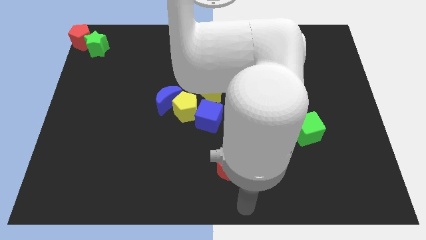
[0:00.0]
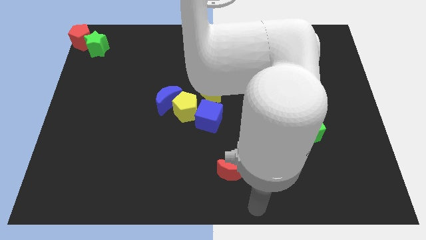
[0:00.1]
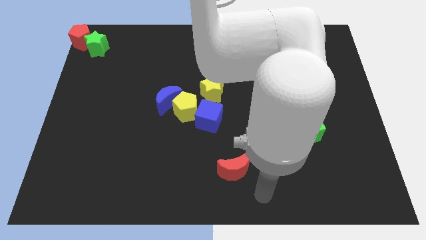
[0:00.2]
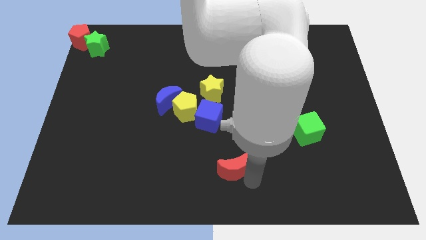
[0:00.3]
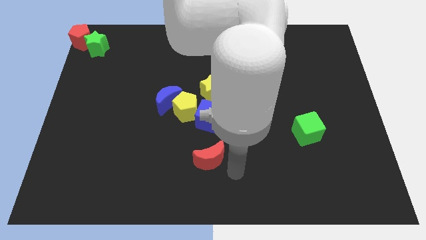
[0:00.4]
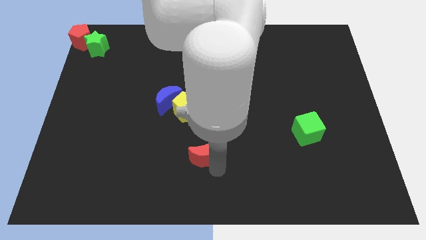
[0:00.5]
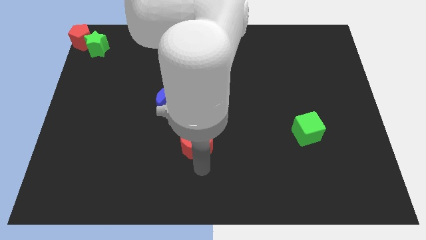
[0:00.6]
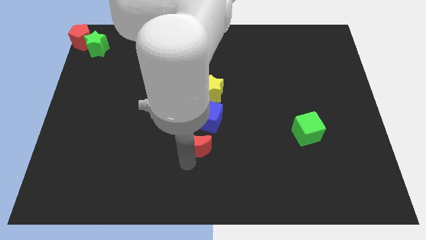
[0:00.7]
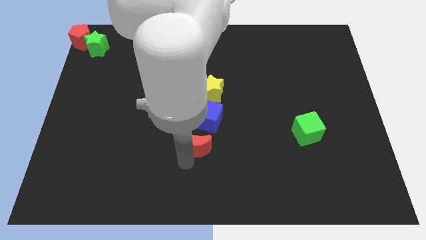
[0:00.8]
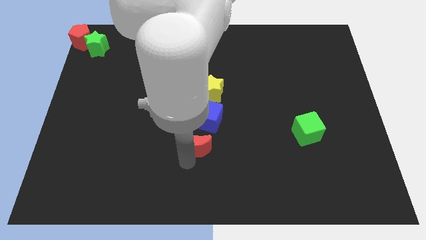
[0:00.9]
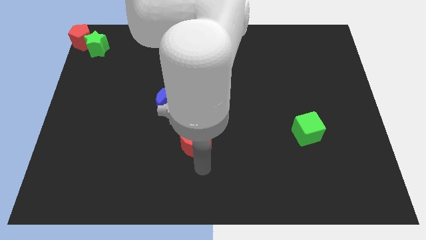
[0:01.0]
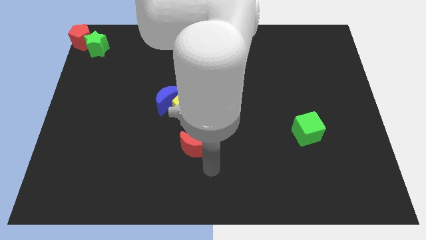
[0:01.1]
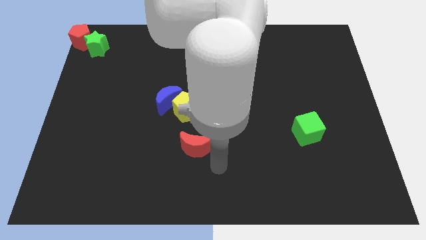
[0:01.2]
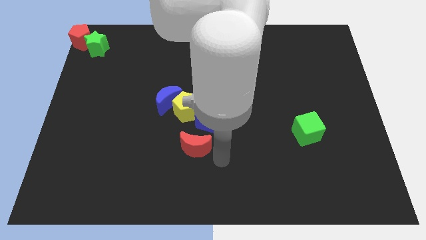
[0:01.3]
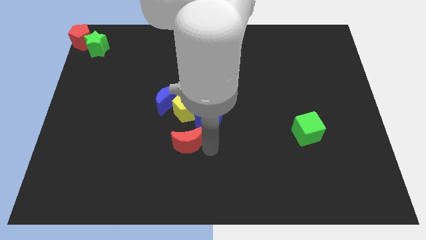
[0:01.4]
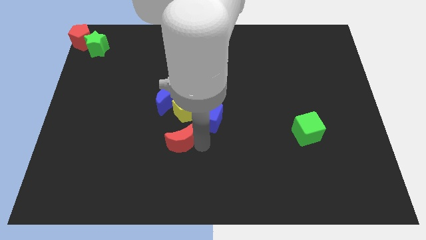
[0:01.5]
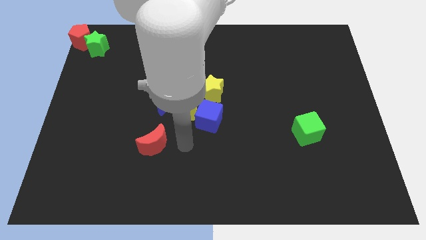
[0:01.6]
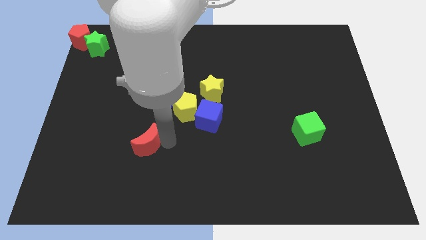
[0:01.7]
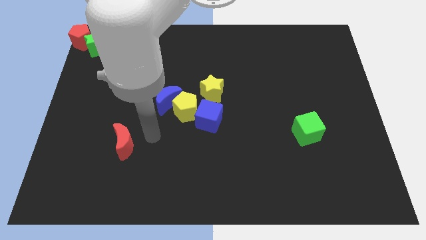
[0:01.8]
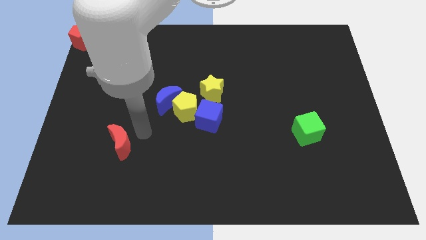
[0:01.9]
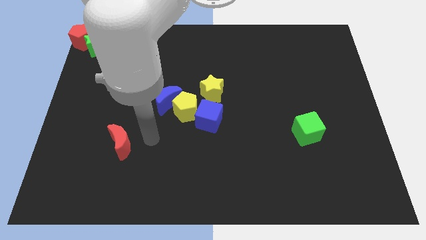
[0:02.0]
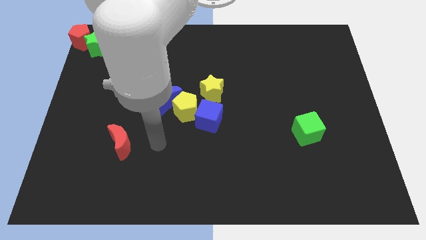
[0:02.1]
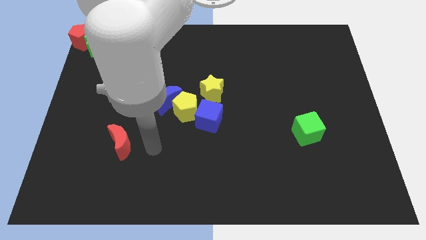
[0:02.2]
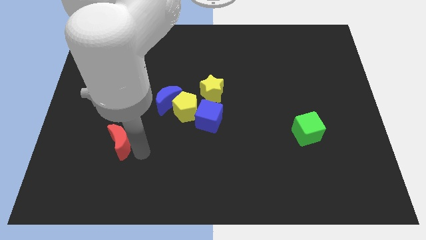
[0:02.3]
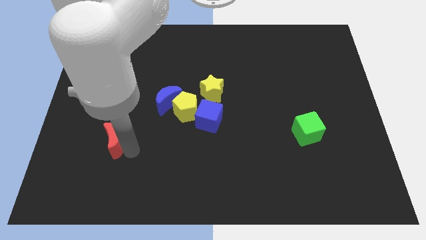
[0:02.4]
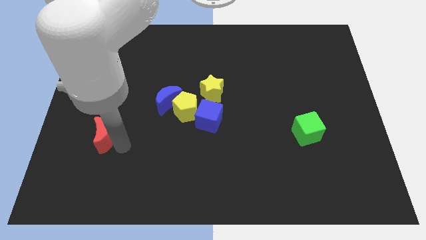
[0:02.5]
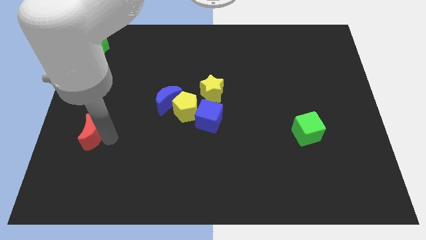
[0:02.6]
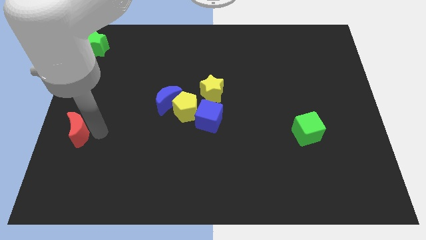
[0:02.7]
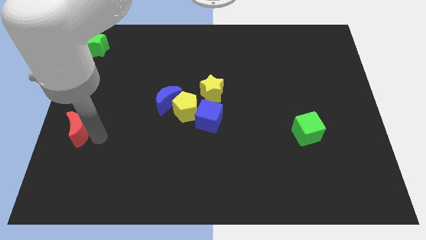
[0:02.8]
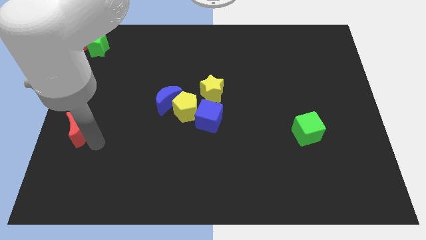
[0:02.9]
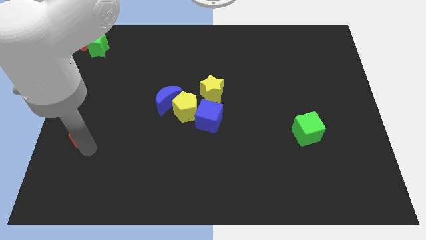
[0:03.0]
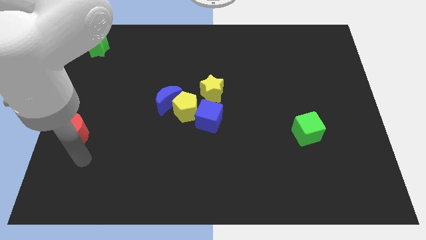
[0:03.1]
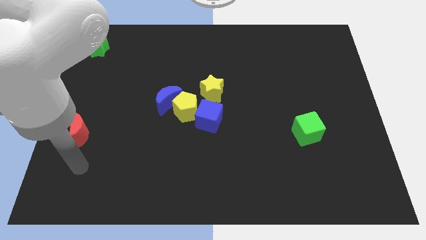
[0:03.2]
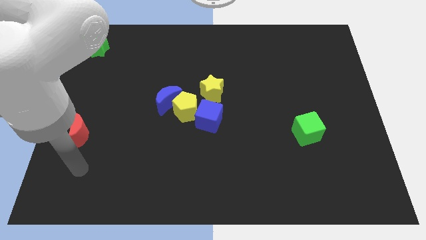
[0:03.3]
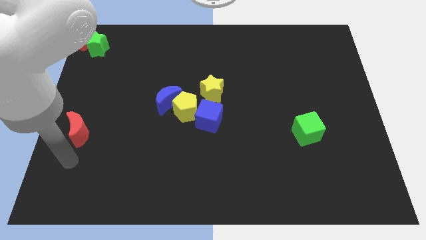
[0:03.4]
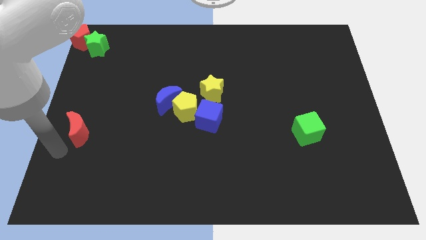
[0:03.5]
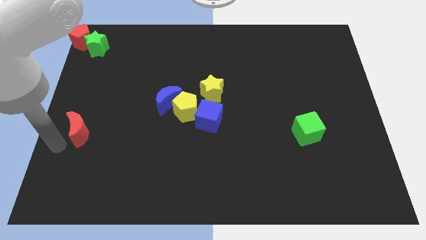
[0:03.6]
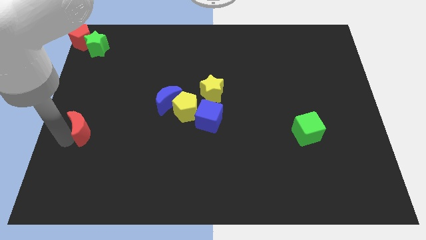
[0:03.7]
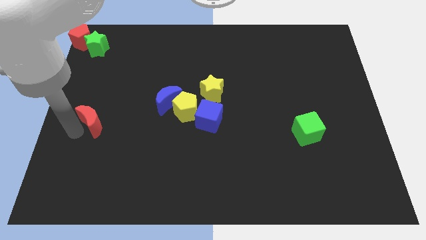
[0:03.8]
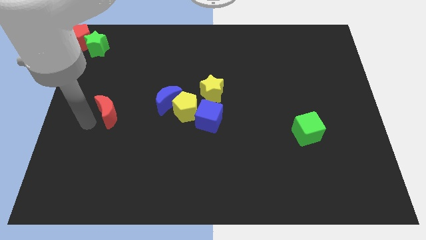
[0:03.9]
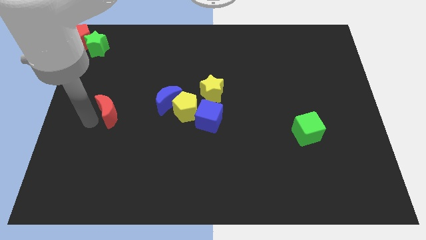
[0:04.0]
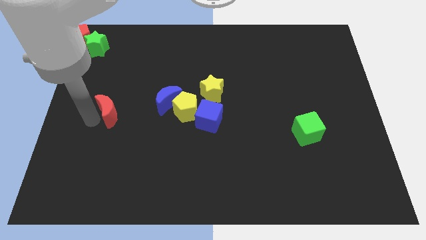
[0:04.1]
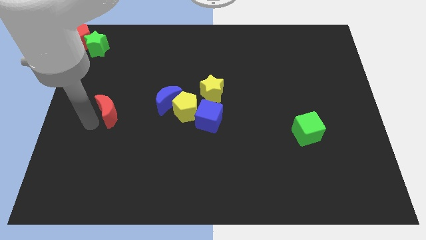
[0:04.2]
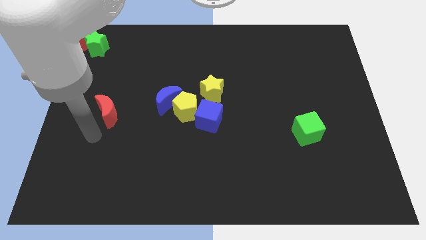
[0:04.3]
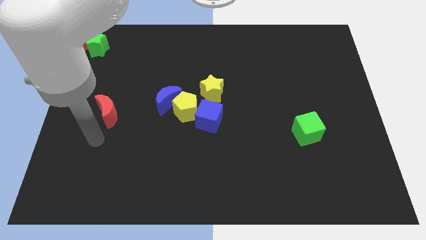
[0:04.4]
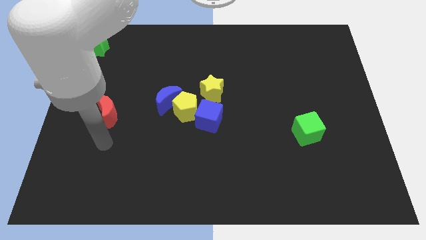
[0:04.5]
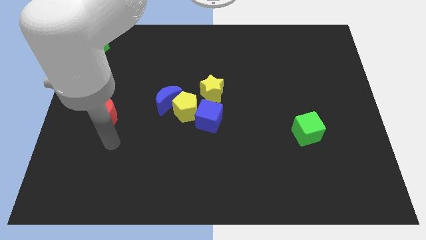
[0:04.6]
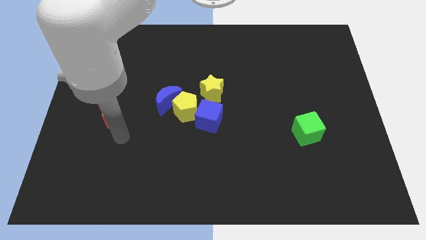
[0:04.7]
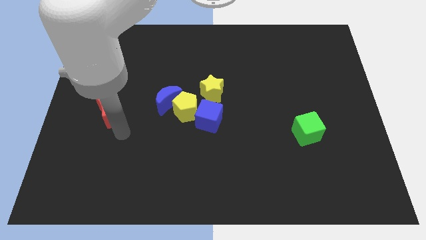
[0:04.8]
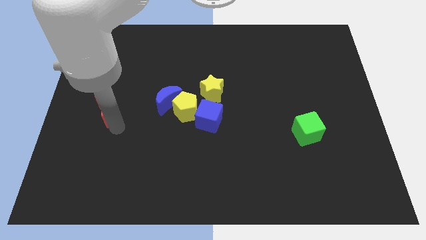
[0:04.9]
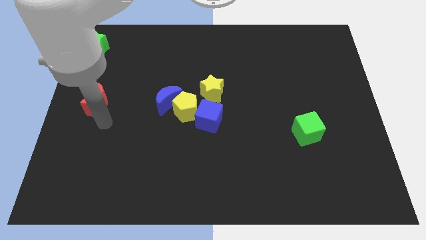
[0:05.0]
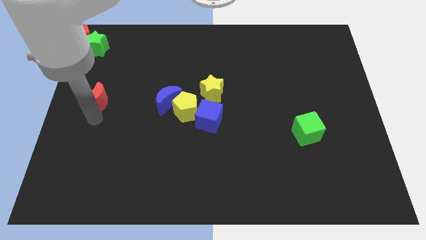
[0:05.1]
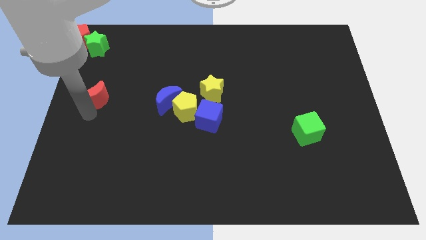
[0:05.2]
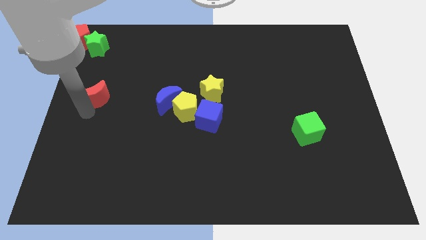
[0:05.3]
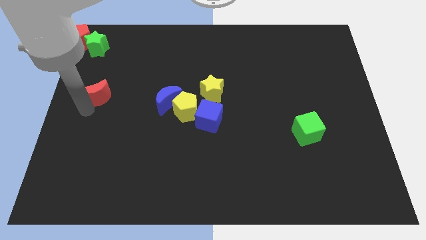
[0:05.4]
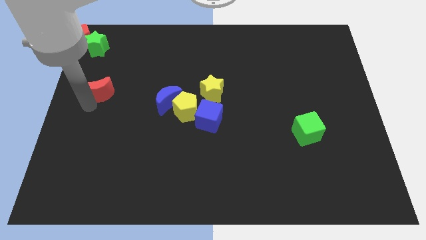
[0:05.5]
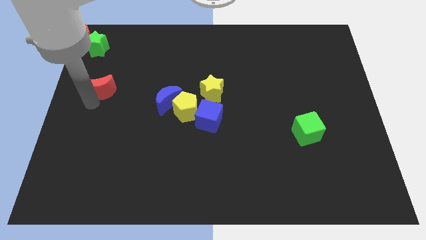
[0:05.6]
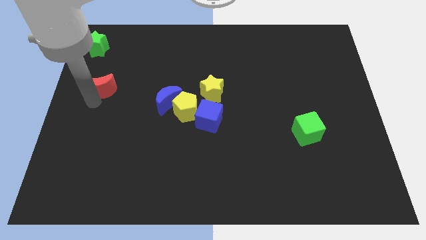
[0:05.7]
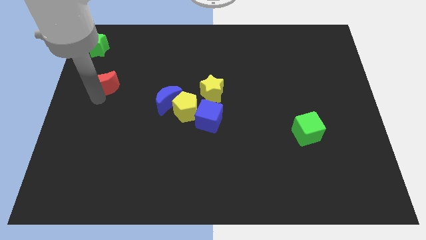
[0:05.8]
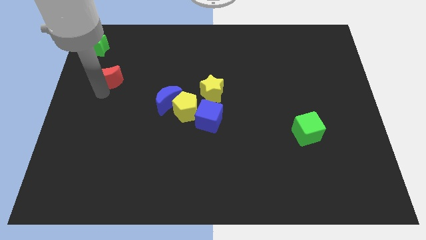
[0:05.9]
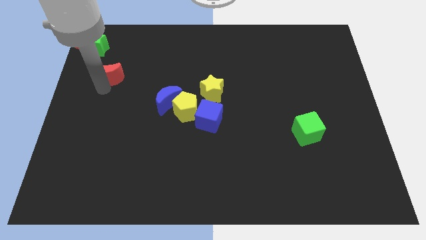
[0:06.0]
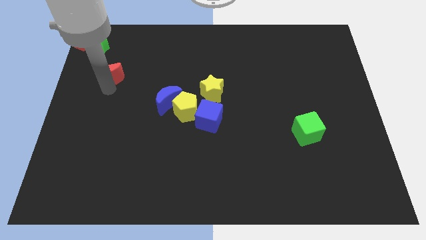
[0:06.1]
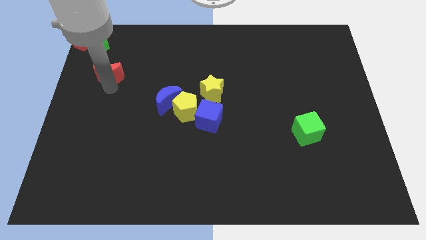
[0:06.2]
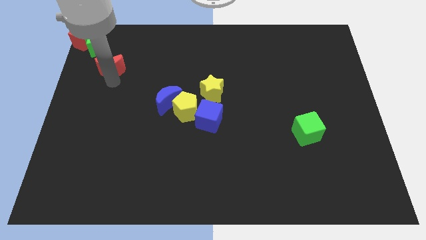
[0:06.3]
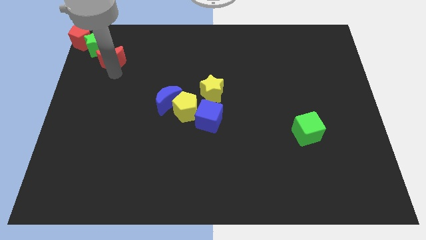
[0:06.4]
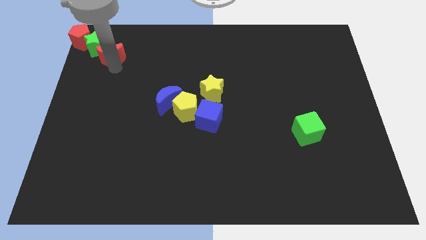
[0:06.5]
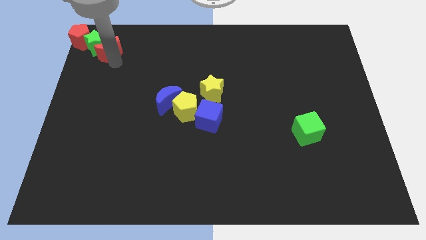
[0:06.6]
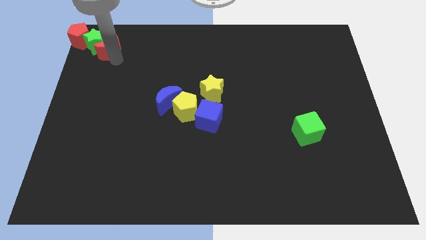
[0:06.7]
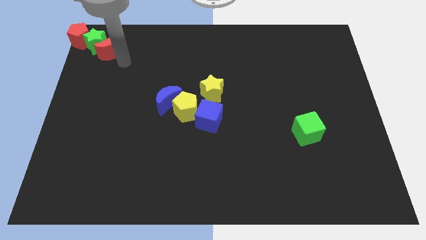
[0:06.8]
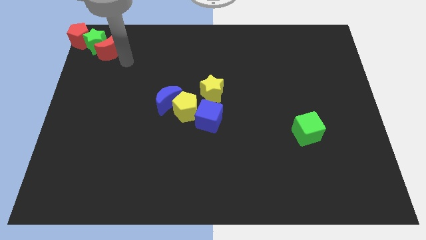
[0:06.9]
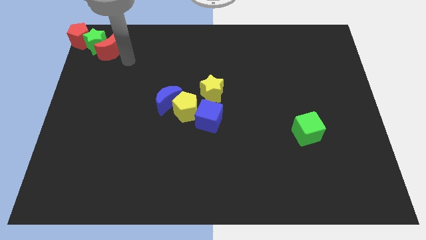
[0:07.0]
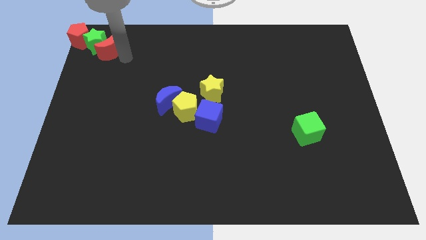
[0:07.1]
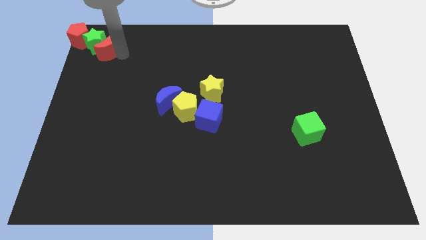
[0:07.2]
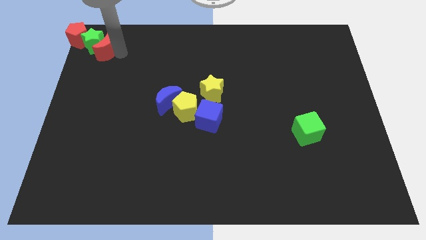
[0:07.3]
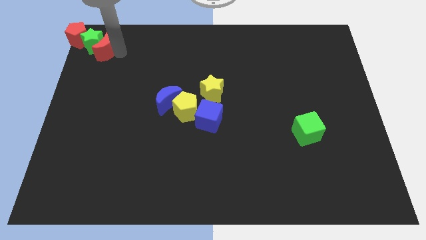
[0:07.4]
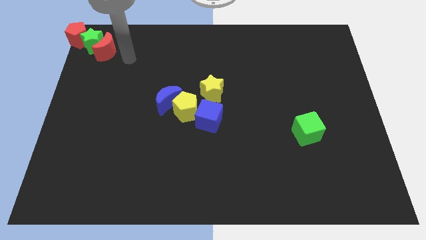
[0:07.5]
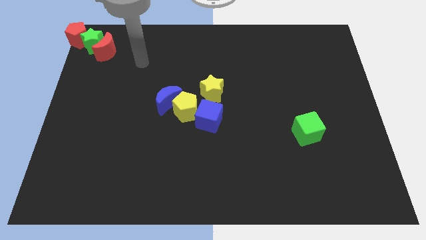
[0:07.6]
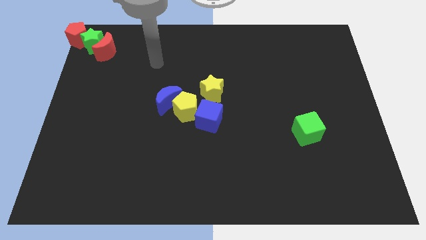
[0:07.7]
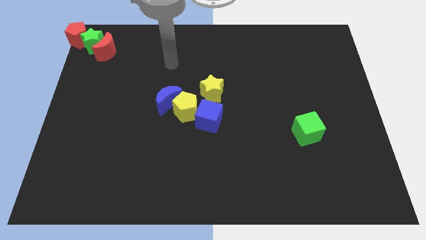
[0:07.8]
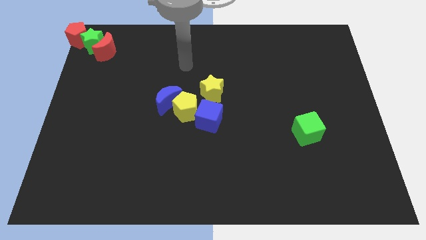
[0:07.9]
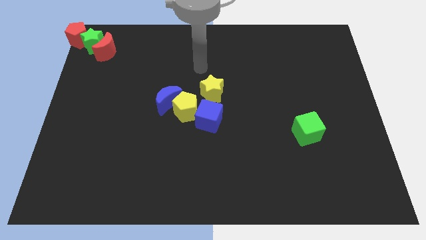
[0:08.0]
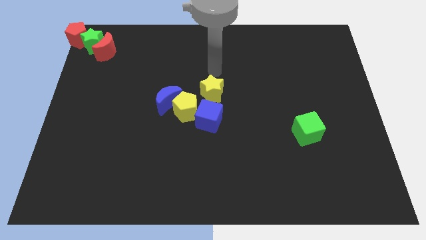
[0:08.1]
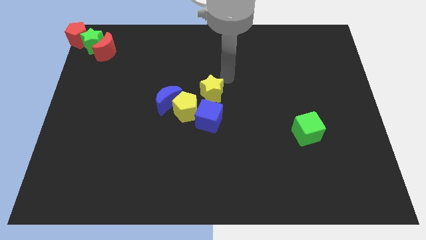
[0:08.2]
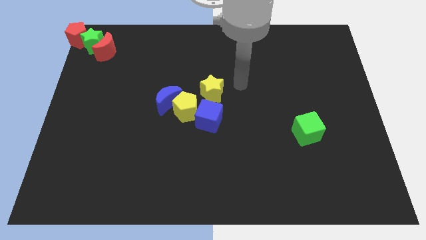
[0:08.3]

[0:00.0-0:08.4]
move the red crescent to right of green star

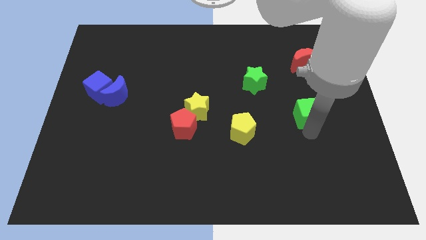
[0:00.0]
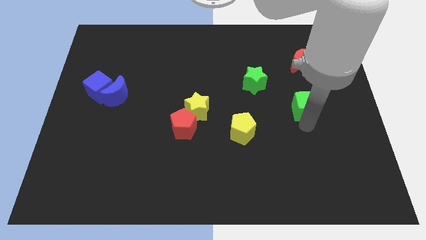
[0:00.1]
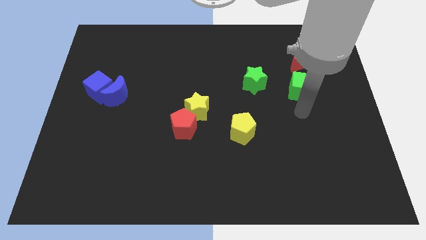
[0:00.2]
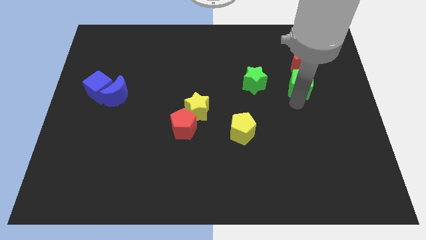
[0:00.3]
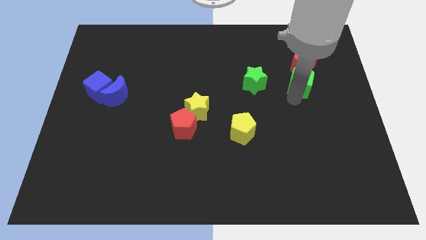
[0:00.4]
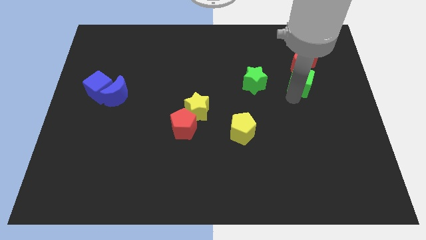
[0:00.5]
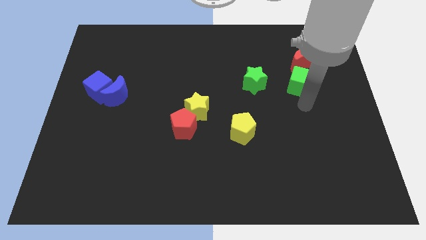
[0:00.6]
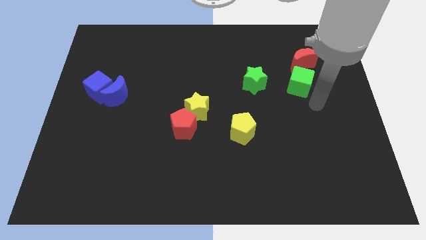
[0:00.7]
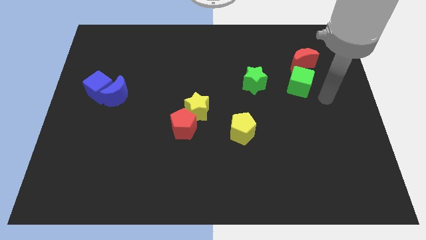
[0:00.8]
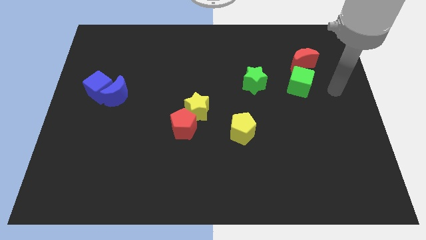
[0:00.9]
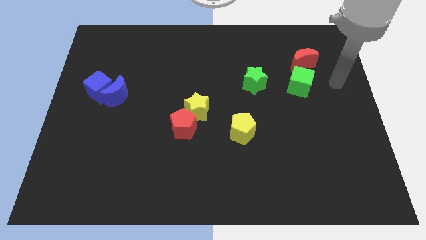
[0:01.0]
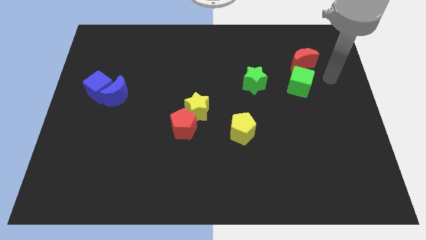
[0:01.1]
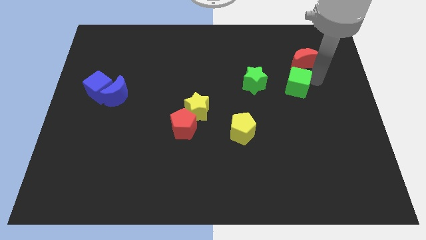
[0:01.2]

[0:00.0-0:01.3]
place the green cube below the red crescent
